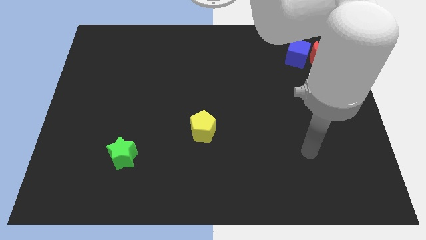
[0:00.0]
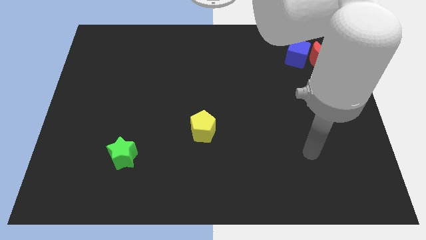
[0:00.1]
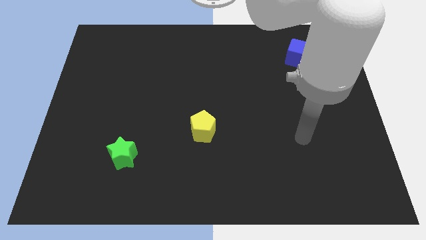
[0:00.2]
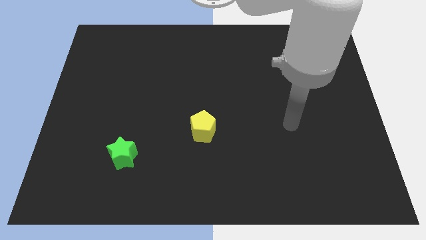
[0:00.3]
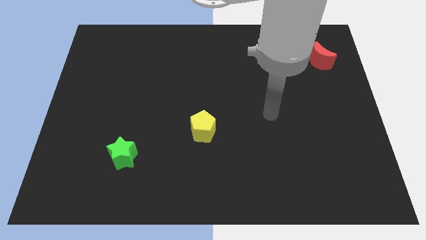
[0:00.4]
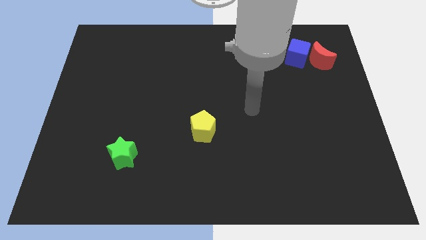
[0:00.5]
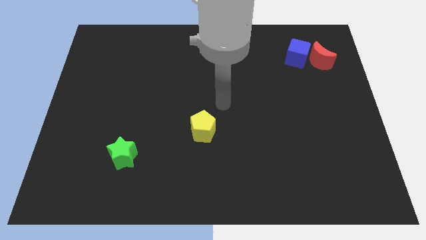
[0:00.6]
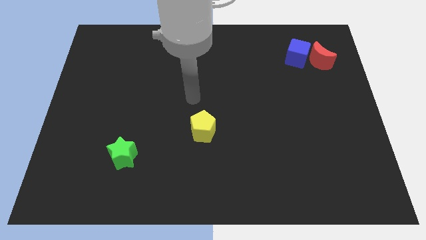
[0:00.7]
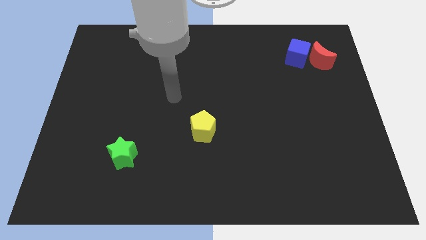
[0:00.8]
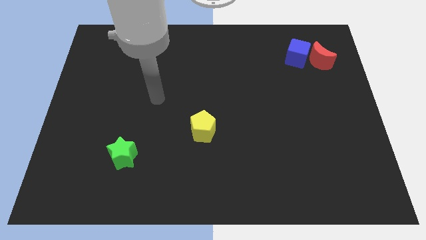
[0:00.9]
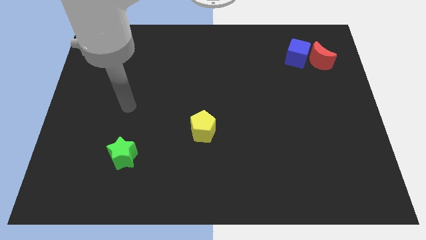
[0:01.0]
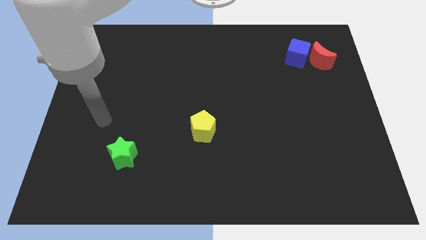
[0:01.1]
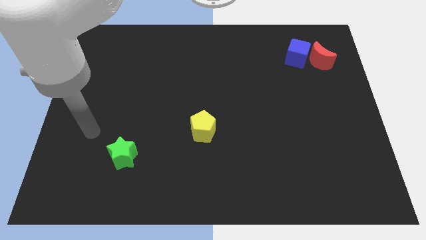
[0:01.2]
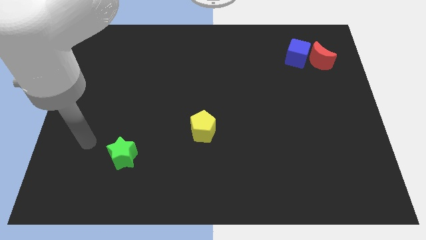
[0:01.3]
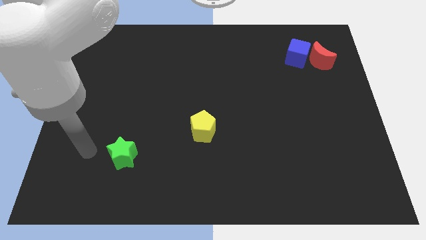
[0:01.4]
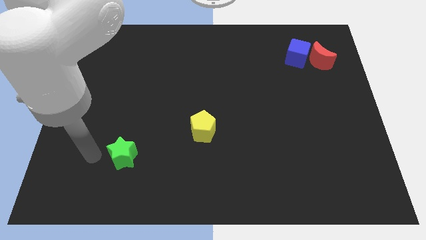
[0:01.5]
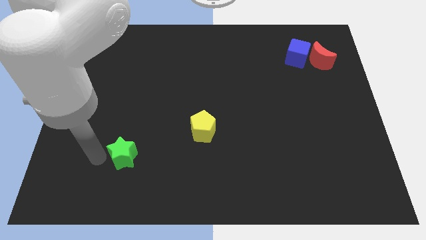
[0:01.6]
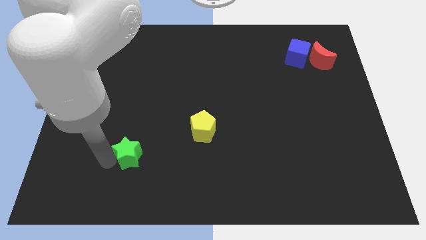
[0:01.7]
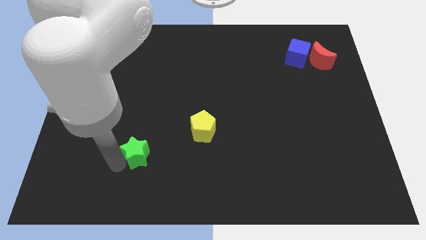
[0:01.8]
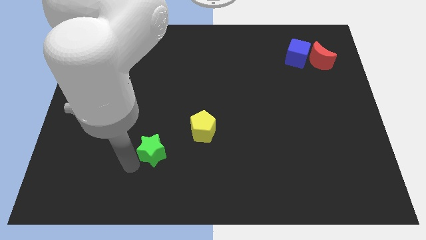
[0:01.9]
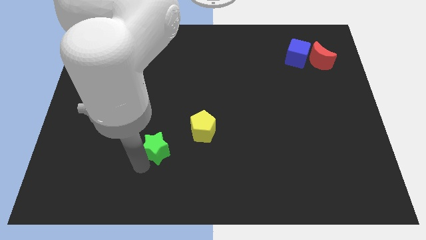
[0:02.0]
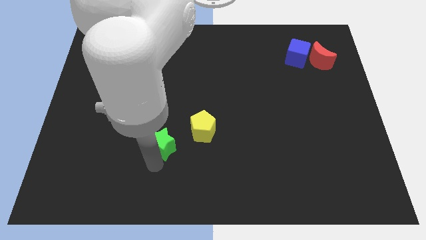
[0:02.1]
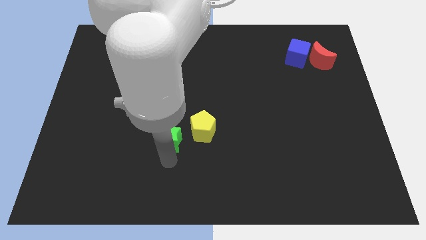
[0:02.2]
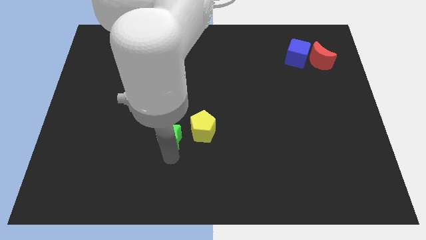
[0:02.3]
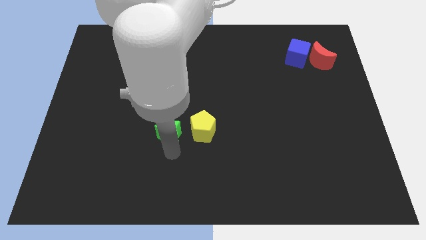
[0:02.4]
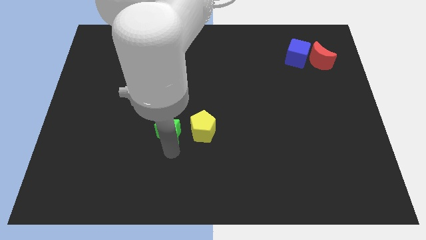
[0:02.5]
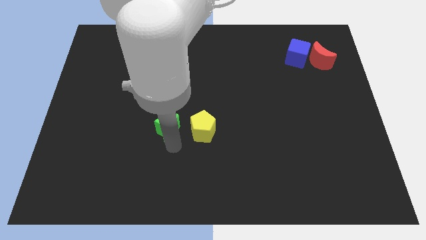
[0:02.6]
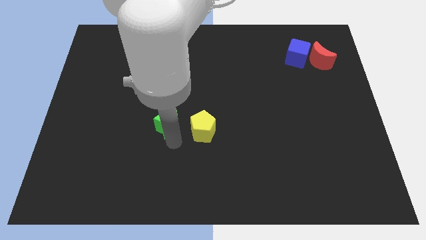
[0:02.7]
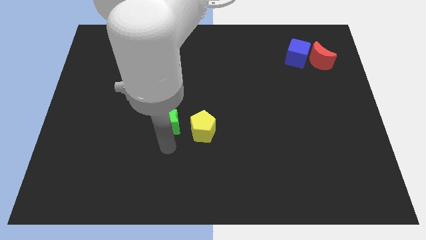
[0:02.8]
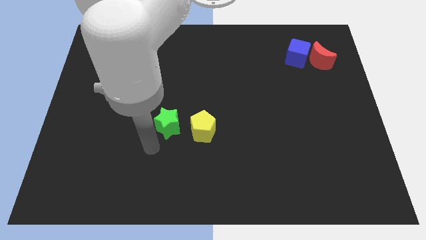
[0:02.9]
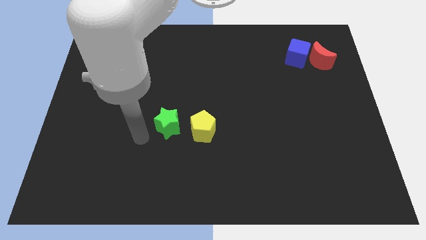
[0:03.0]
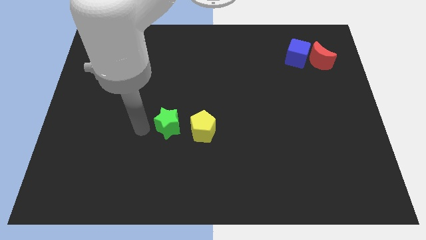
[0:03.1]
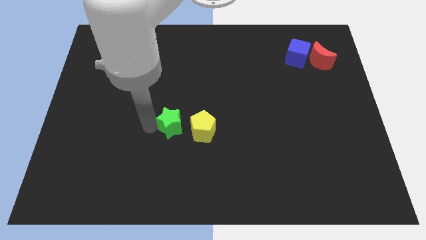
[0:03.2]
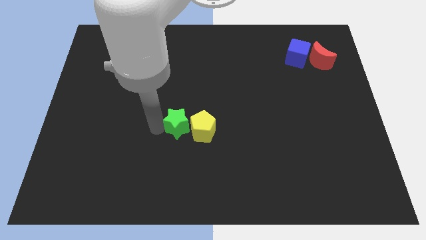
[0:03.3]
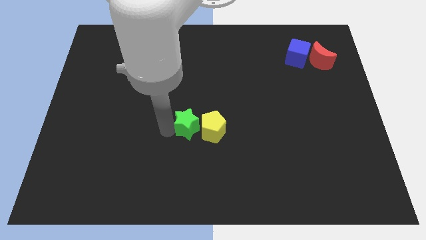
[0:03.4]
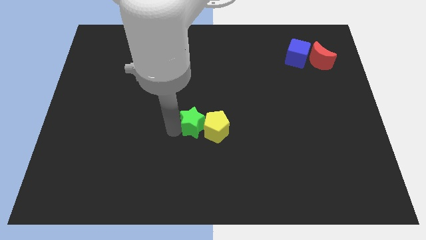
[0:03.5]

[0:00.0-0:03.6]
put the star to the yellow pentagon

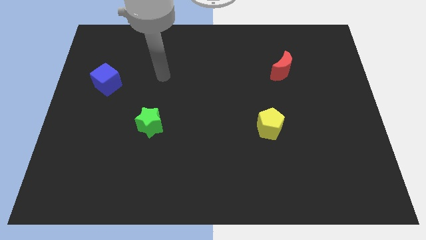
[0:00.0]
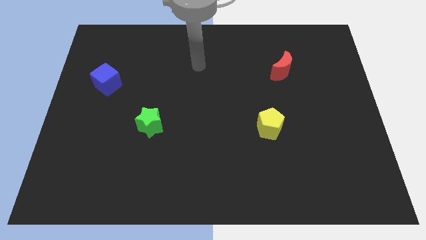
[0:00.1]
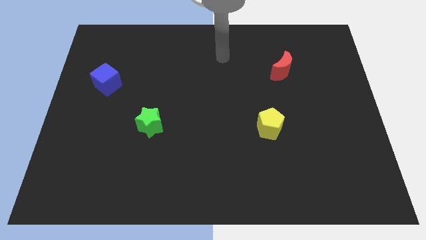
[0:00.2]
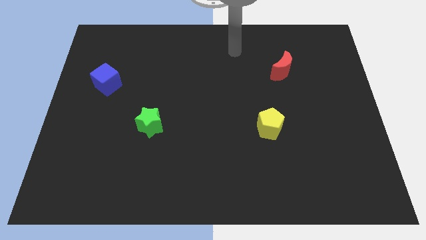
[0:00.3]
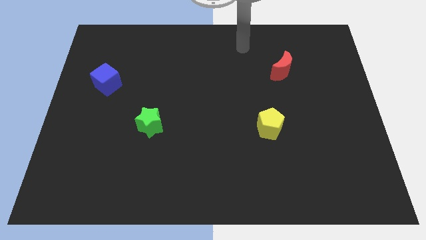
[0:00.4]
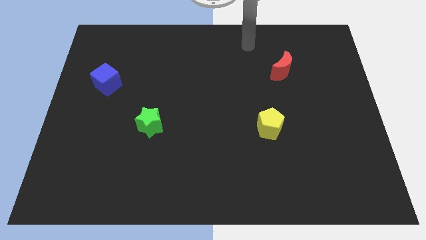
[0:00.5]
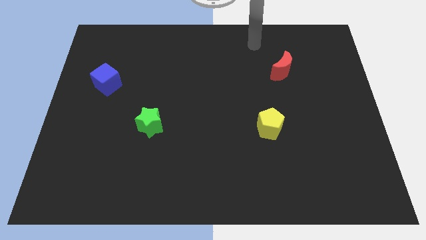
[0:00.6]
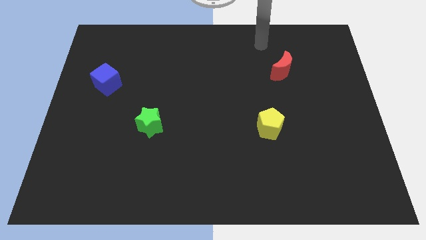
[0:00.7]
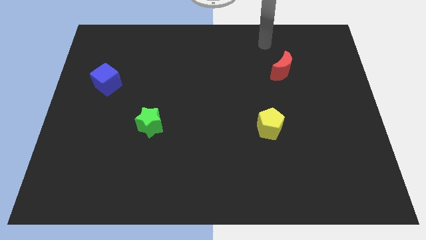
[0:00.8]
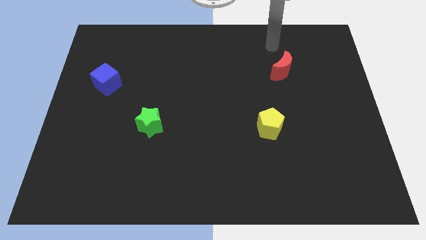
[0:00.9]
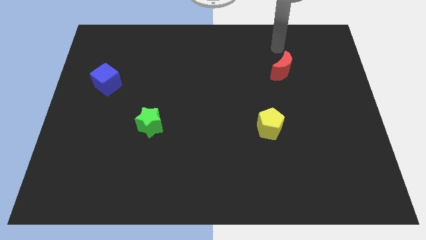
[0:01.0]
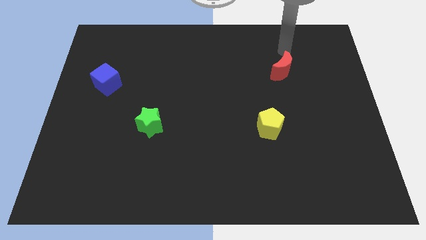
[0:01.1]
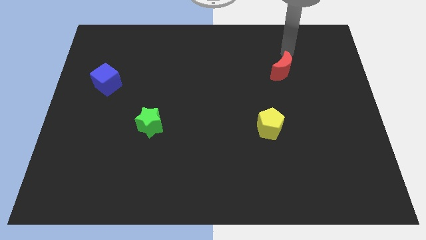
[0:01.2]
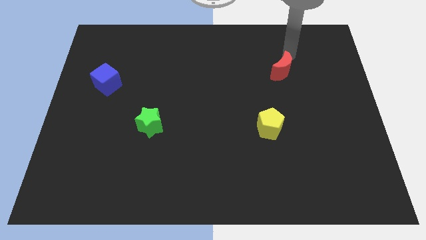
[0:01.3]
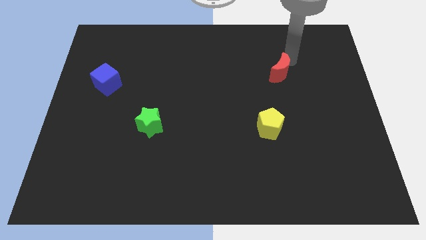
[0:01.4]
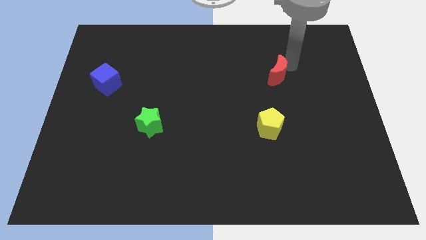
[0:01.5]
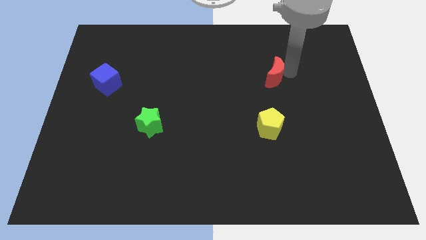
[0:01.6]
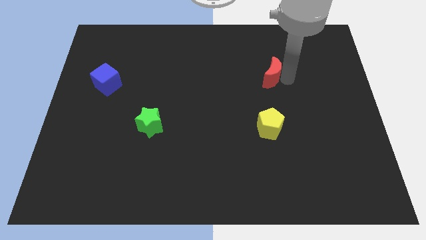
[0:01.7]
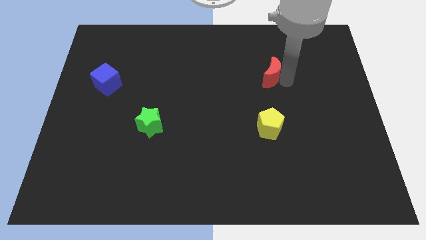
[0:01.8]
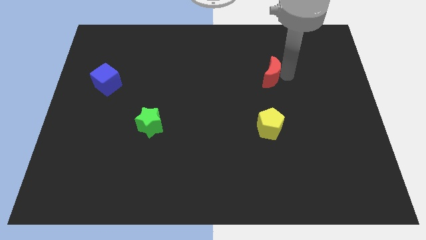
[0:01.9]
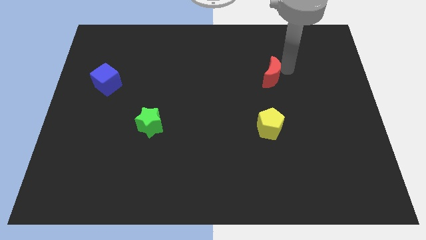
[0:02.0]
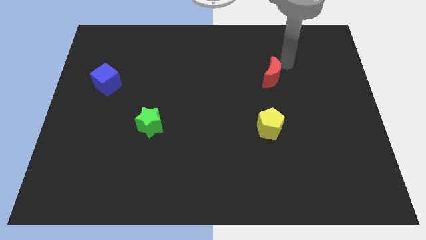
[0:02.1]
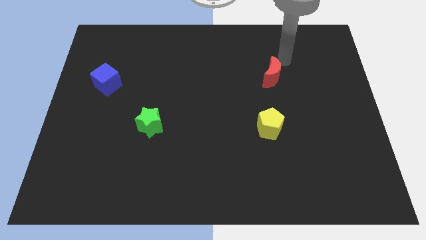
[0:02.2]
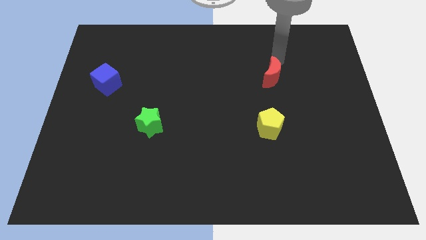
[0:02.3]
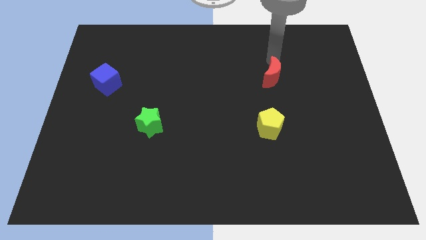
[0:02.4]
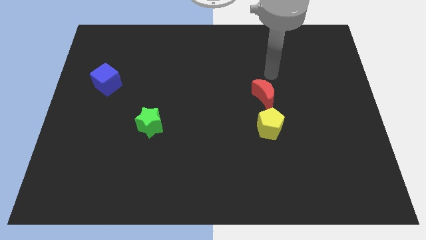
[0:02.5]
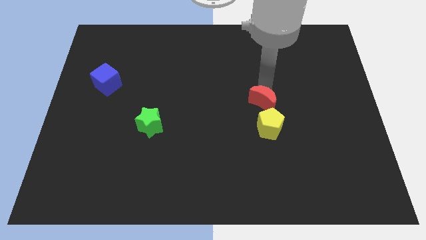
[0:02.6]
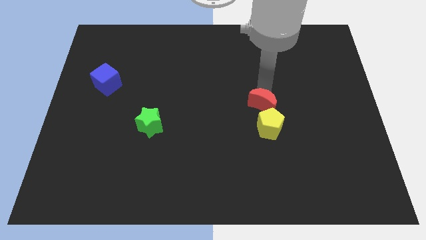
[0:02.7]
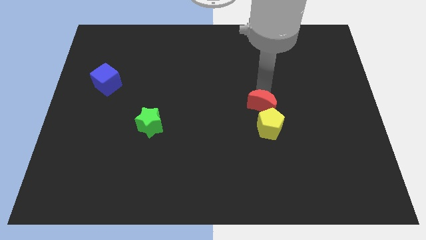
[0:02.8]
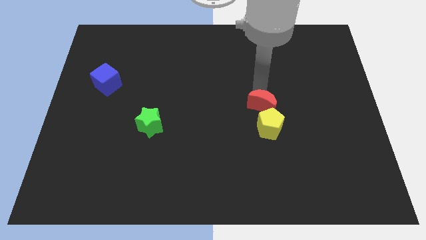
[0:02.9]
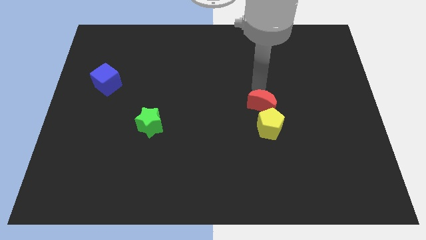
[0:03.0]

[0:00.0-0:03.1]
push the red block next to the yellow pentagon

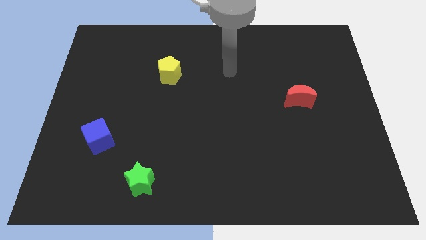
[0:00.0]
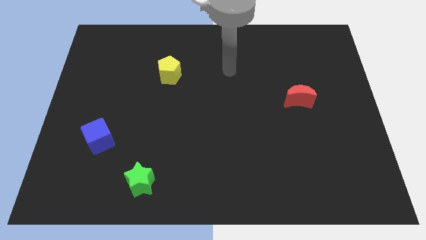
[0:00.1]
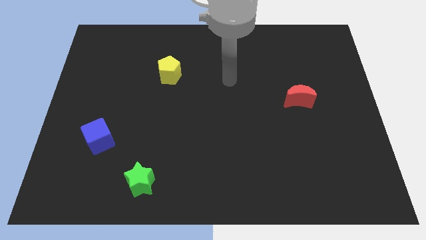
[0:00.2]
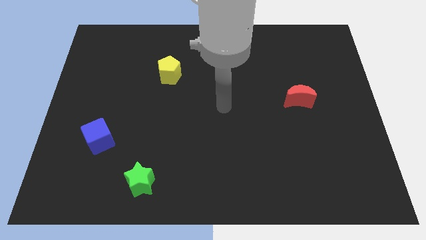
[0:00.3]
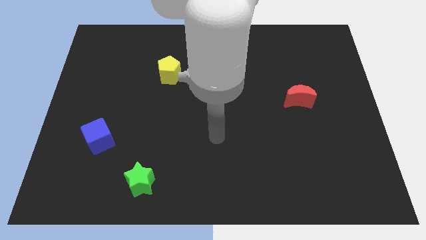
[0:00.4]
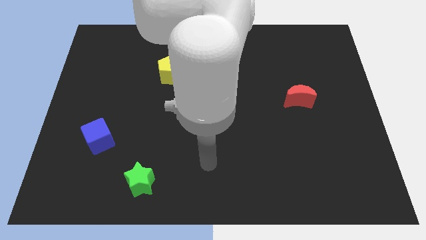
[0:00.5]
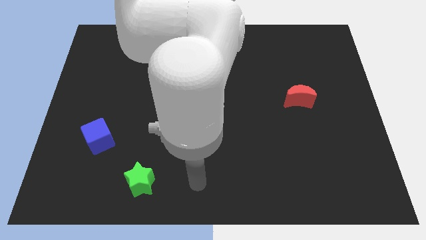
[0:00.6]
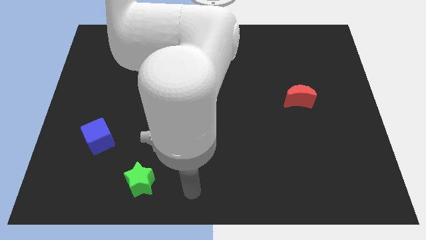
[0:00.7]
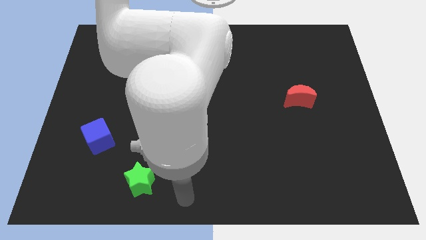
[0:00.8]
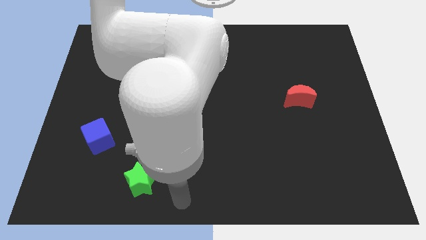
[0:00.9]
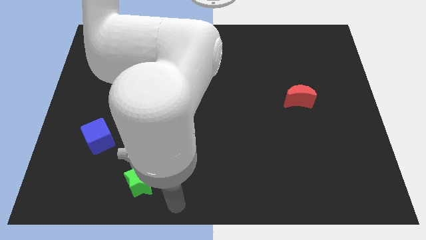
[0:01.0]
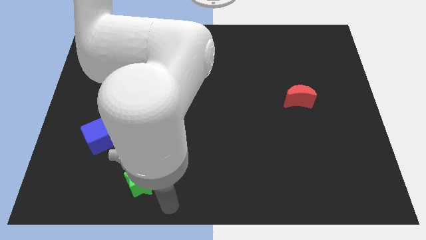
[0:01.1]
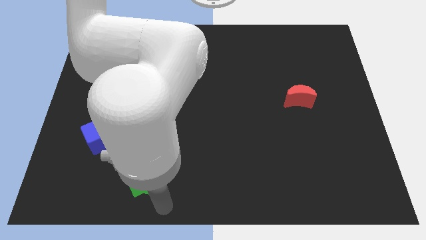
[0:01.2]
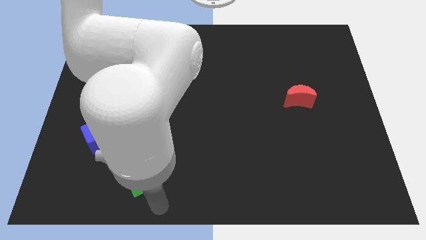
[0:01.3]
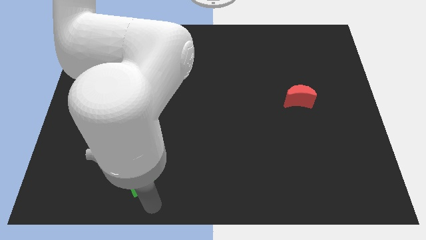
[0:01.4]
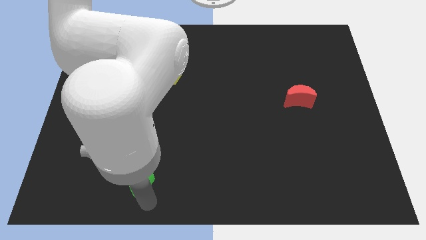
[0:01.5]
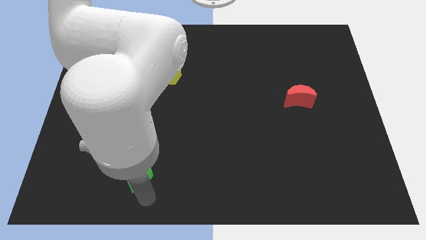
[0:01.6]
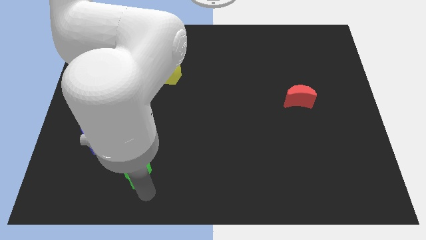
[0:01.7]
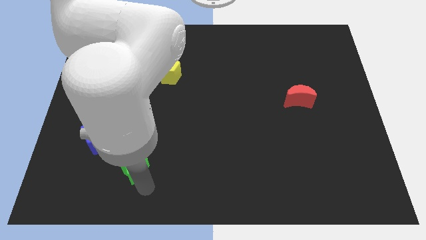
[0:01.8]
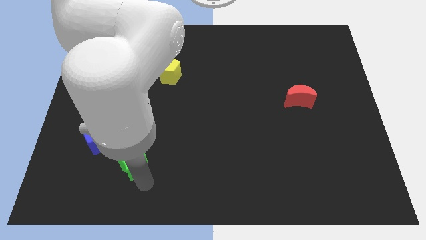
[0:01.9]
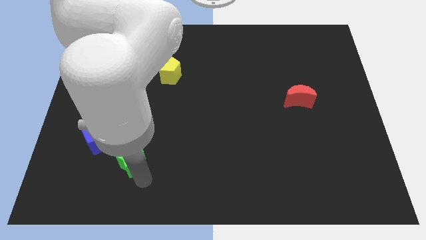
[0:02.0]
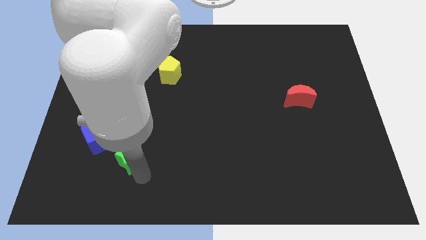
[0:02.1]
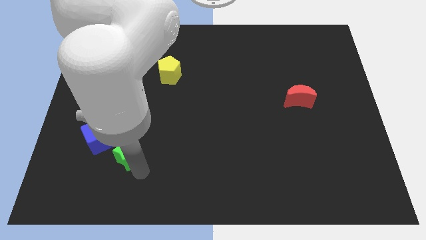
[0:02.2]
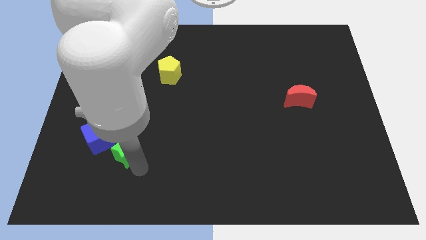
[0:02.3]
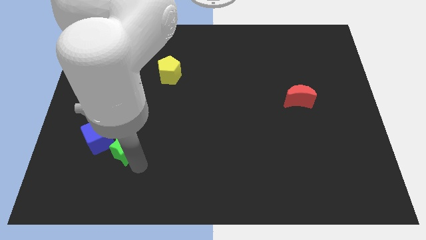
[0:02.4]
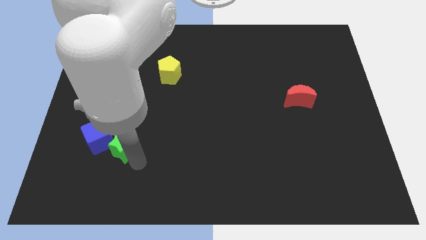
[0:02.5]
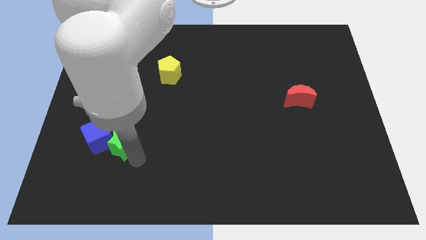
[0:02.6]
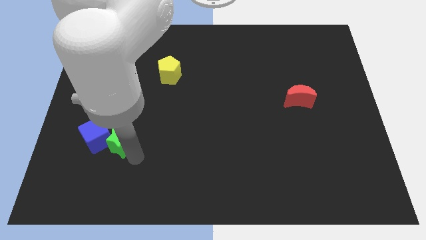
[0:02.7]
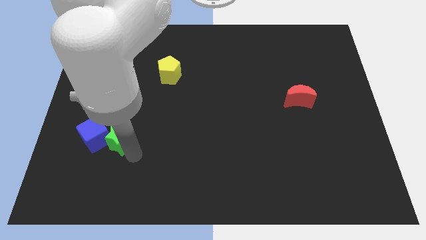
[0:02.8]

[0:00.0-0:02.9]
put the star close to the blue block
